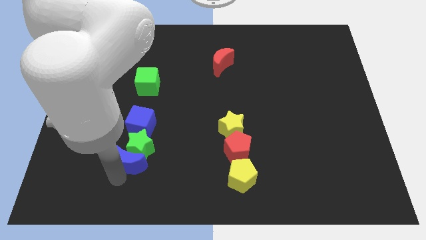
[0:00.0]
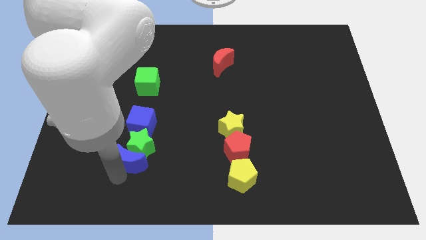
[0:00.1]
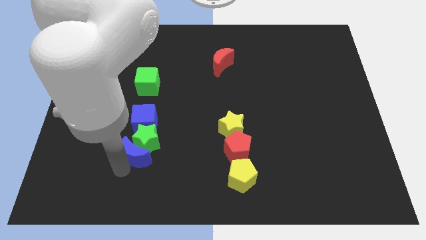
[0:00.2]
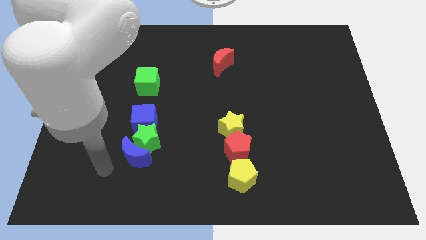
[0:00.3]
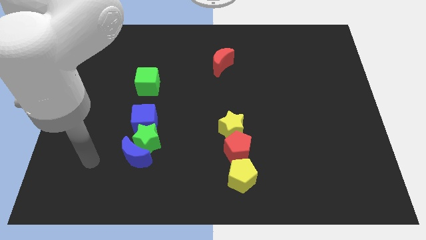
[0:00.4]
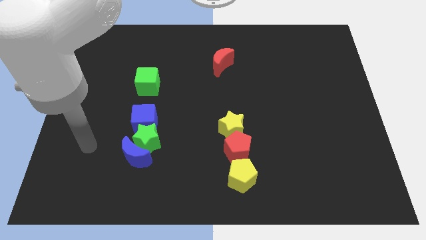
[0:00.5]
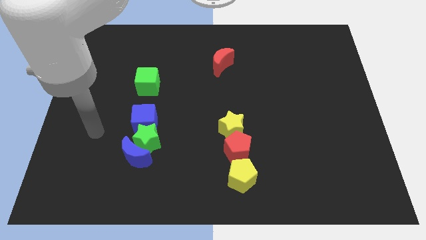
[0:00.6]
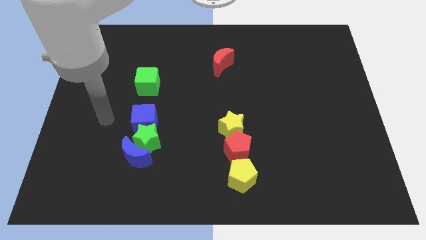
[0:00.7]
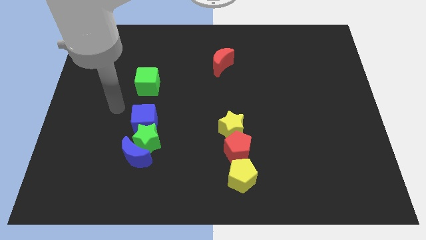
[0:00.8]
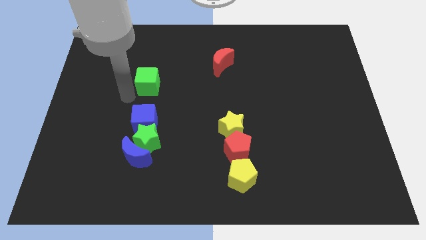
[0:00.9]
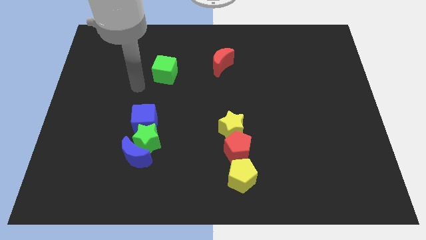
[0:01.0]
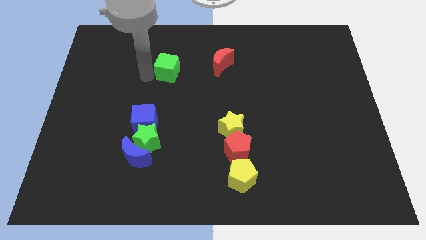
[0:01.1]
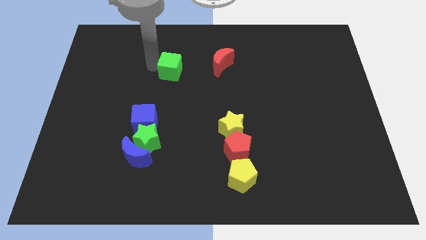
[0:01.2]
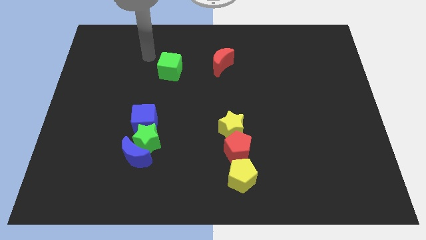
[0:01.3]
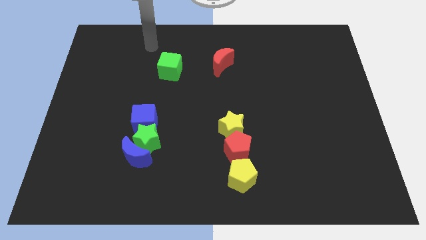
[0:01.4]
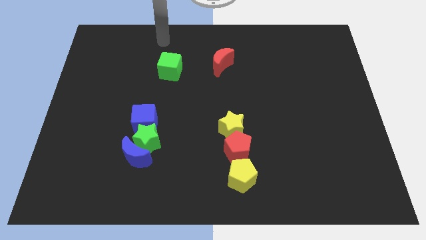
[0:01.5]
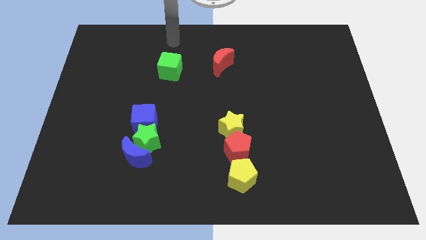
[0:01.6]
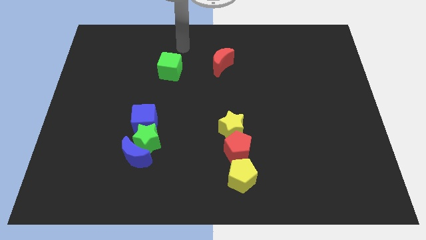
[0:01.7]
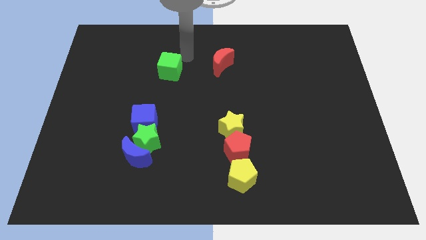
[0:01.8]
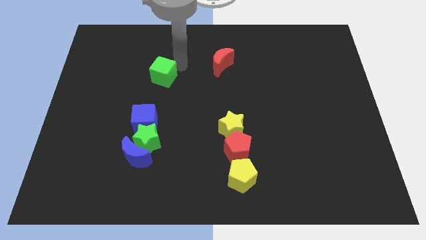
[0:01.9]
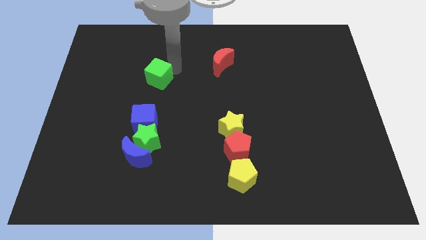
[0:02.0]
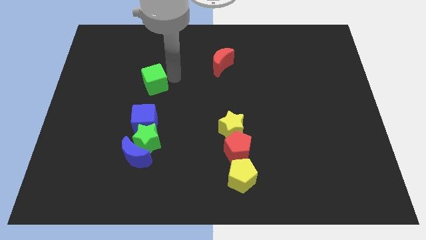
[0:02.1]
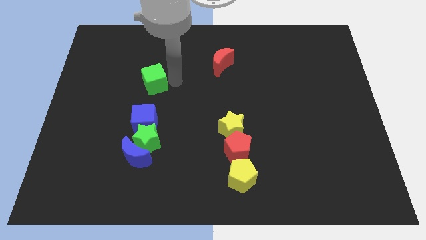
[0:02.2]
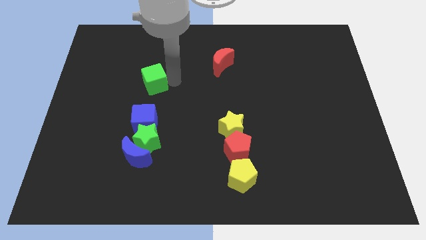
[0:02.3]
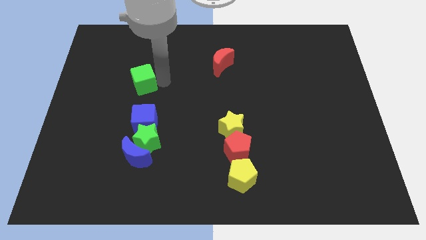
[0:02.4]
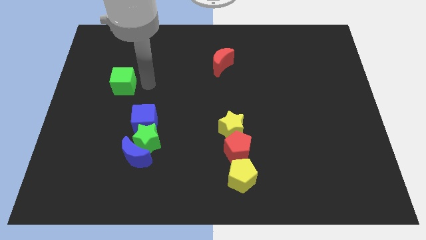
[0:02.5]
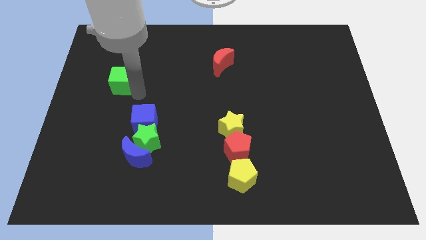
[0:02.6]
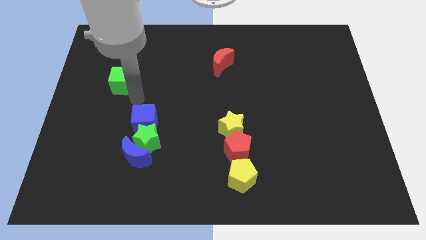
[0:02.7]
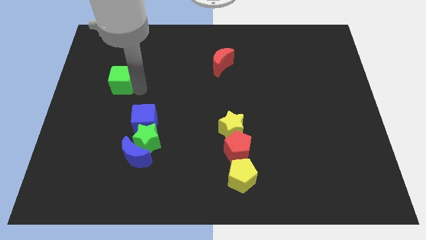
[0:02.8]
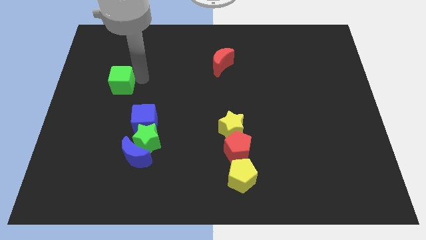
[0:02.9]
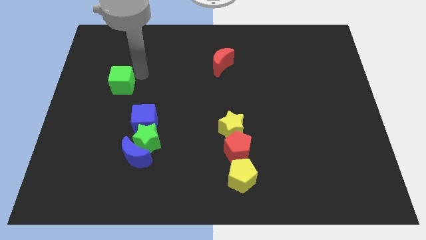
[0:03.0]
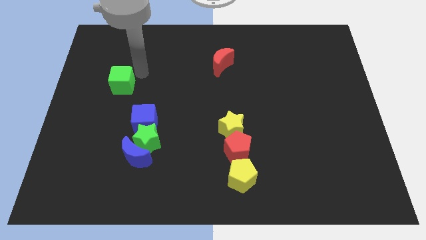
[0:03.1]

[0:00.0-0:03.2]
push the green cube diagonally top left to the blue cube

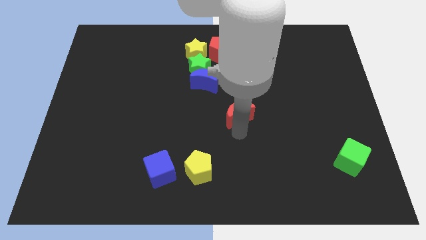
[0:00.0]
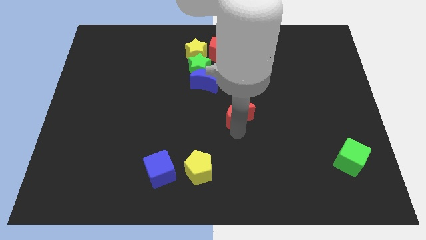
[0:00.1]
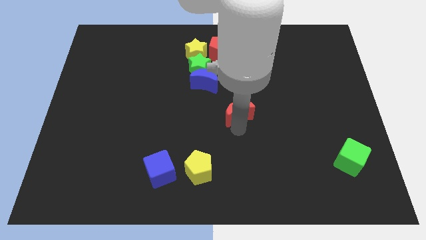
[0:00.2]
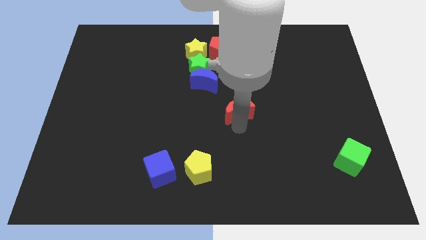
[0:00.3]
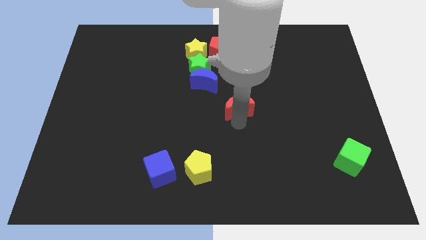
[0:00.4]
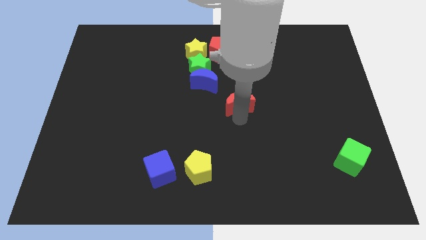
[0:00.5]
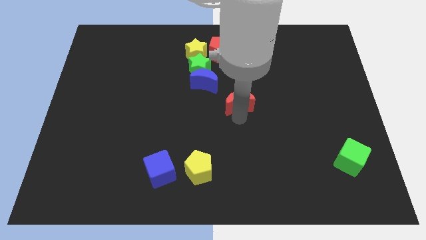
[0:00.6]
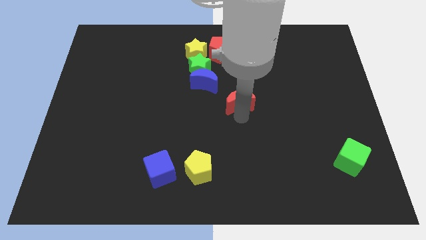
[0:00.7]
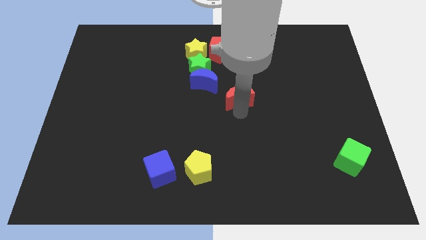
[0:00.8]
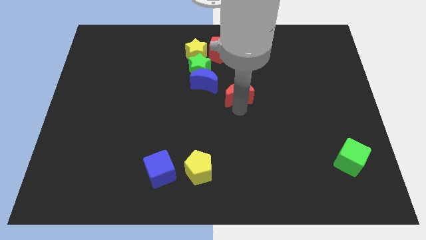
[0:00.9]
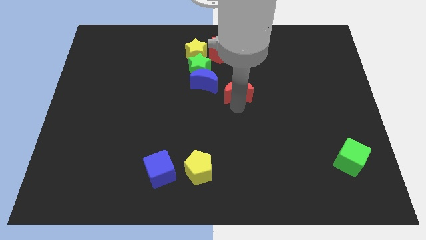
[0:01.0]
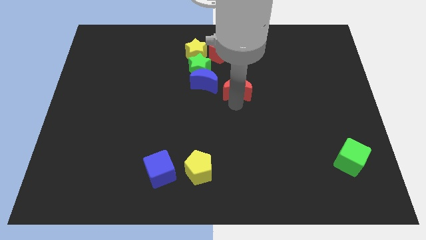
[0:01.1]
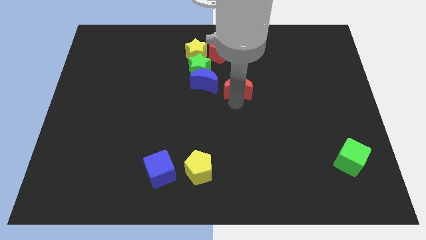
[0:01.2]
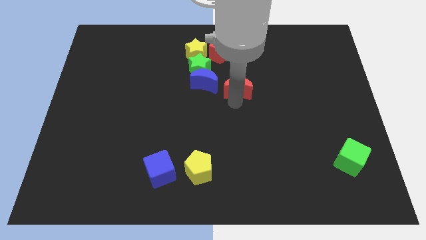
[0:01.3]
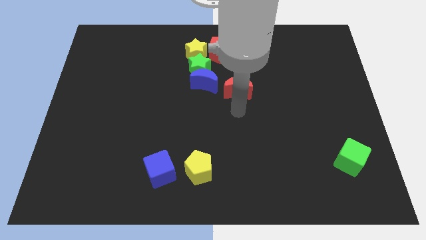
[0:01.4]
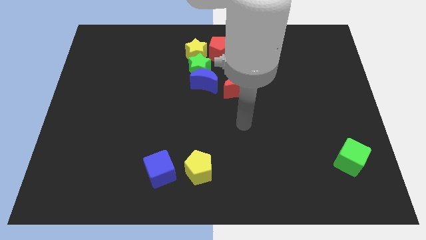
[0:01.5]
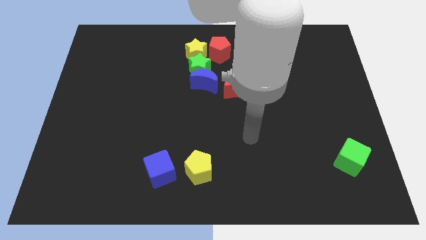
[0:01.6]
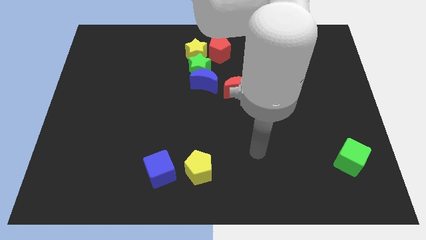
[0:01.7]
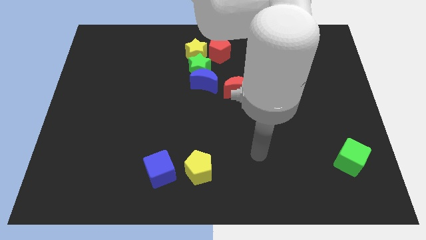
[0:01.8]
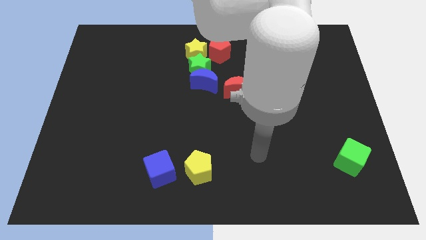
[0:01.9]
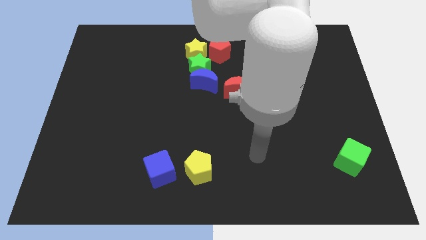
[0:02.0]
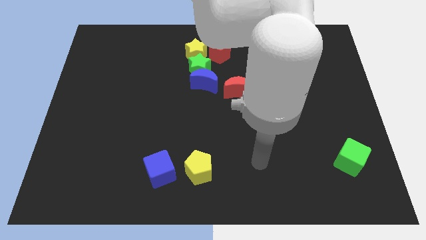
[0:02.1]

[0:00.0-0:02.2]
place the red moon diagonally to green cube

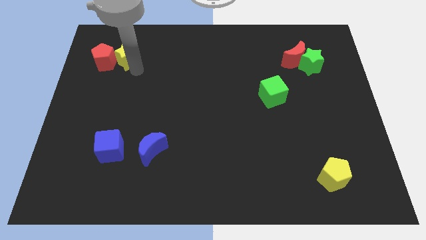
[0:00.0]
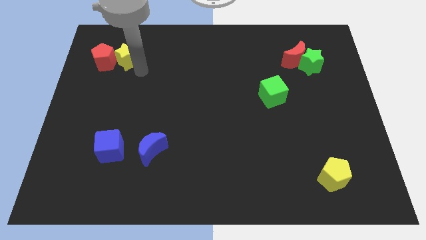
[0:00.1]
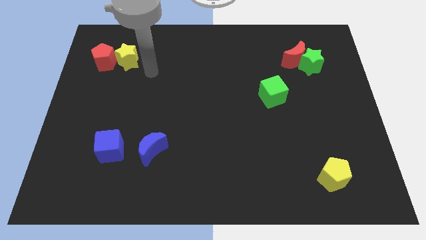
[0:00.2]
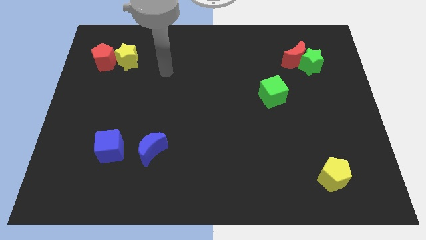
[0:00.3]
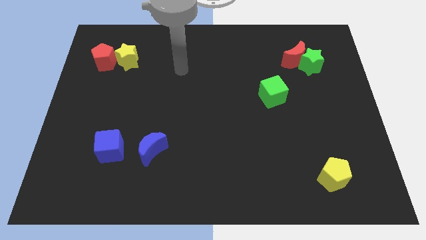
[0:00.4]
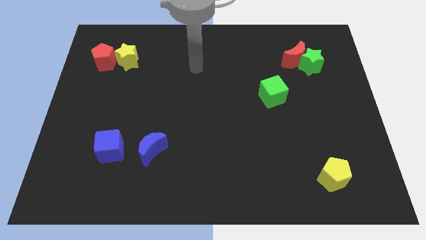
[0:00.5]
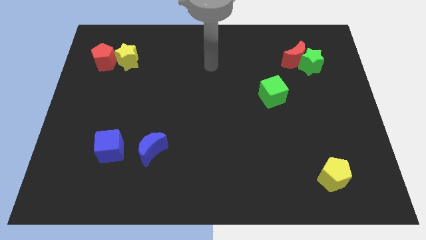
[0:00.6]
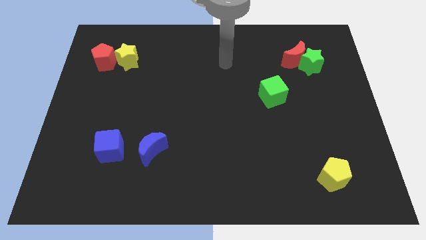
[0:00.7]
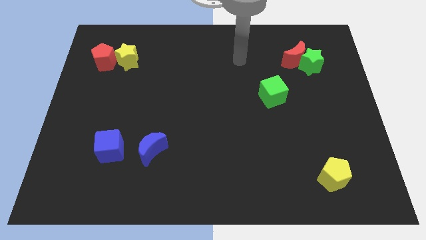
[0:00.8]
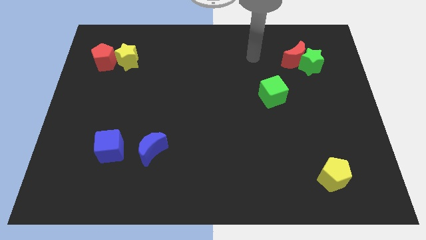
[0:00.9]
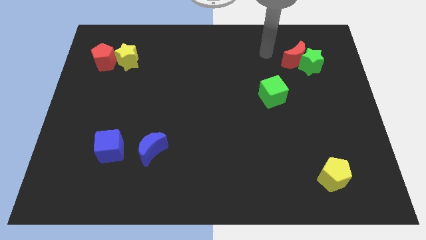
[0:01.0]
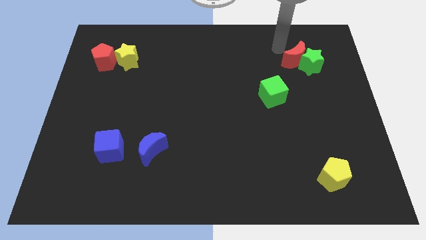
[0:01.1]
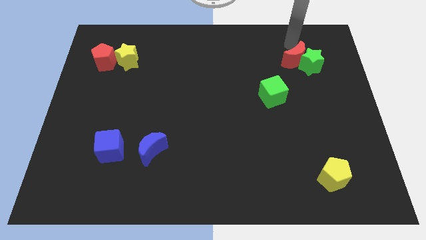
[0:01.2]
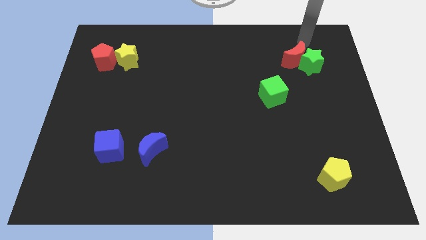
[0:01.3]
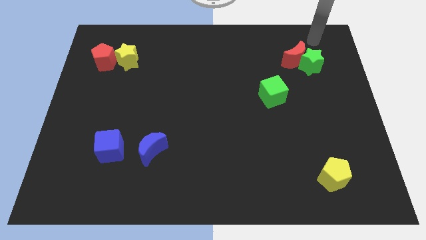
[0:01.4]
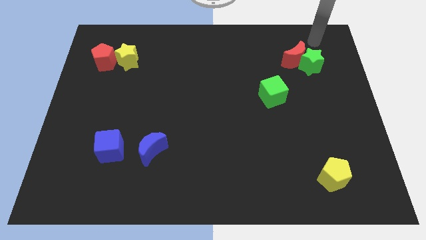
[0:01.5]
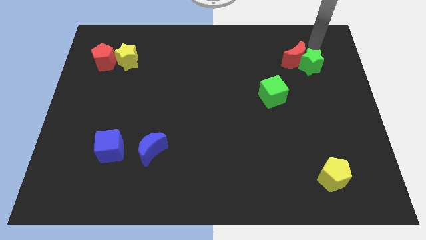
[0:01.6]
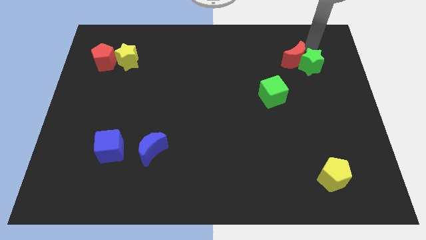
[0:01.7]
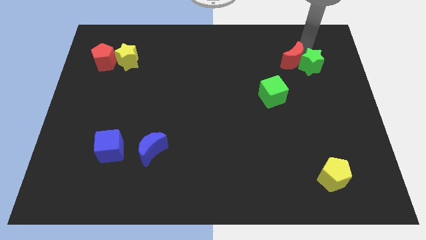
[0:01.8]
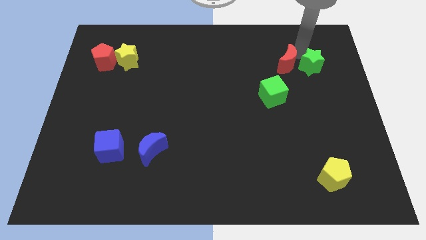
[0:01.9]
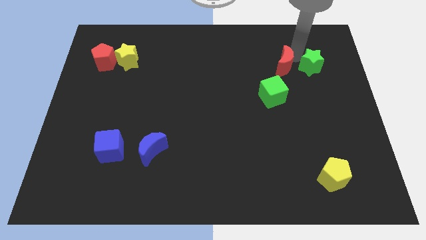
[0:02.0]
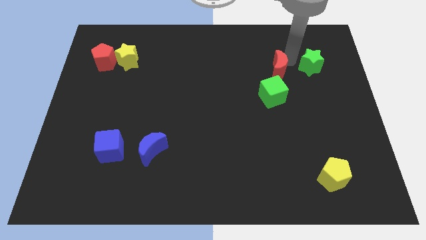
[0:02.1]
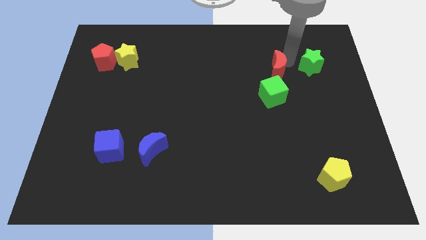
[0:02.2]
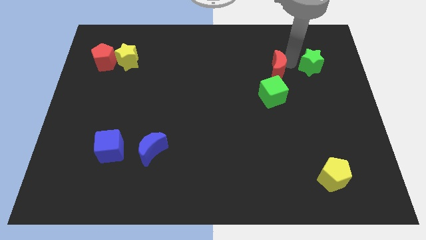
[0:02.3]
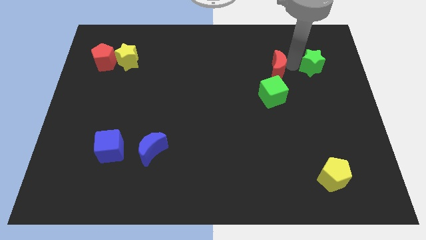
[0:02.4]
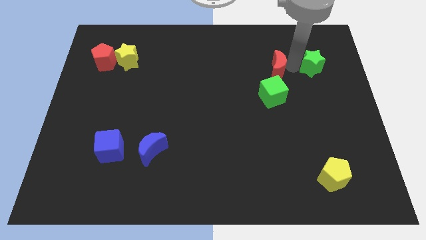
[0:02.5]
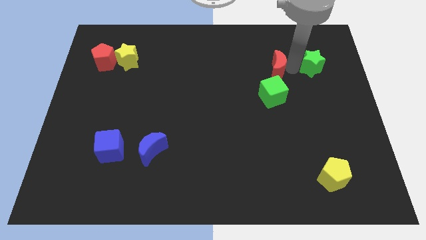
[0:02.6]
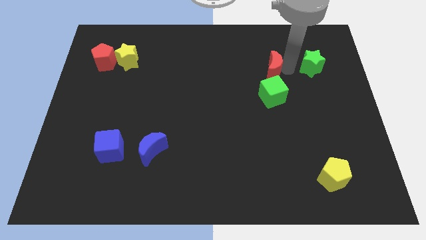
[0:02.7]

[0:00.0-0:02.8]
move the red crescent to the top of green cube

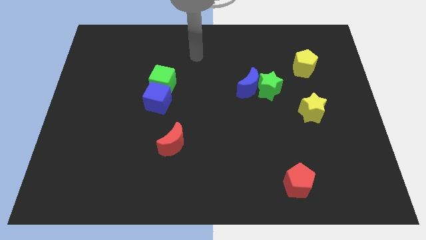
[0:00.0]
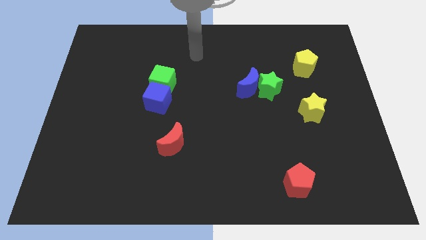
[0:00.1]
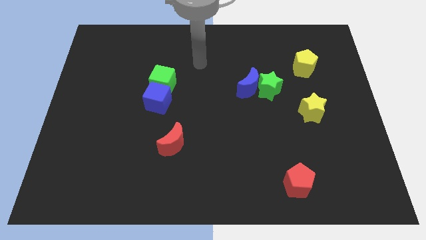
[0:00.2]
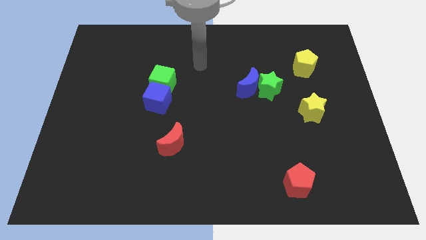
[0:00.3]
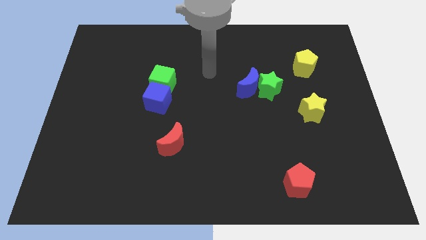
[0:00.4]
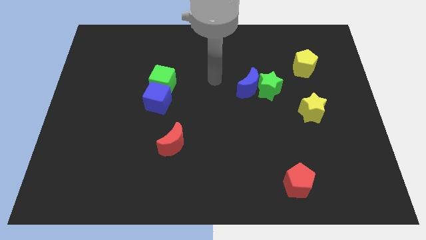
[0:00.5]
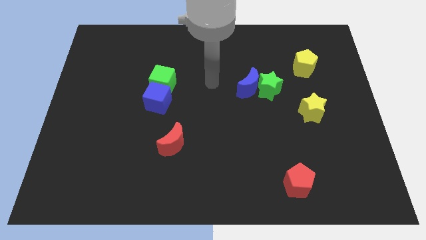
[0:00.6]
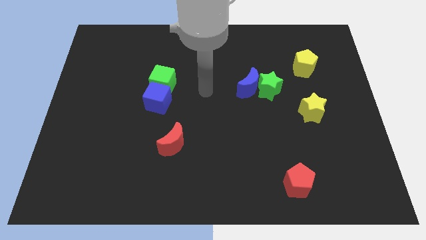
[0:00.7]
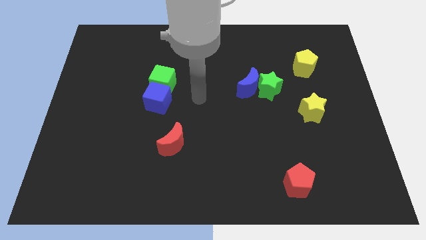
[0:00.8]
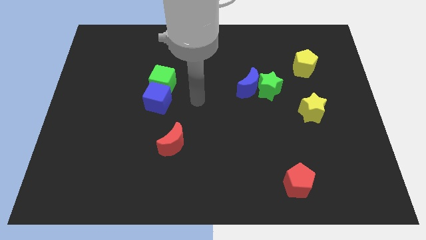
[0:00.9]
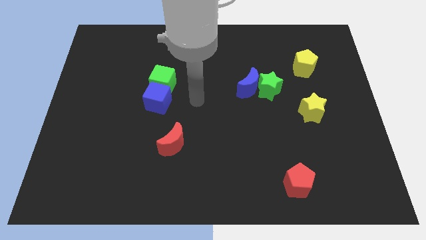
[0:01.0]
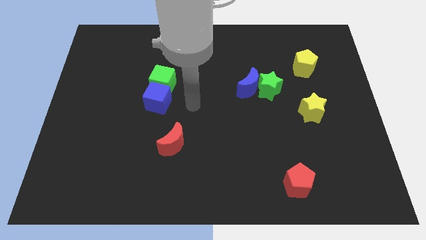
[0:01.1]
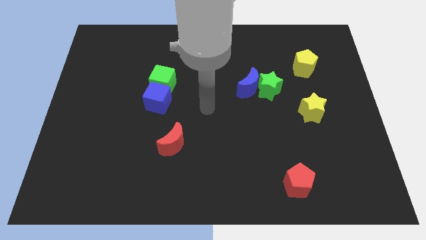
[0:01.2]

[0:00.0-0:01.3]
place your arm at the center of the board
